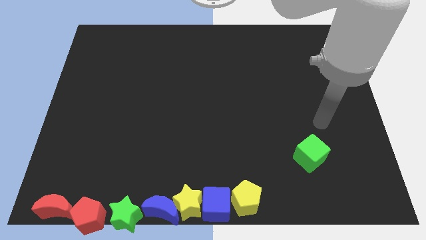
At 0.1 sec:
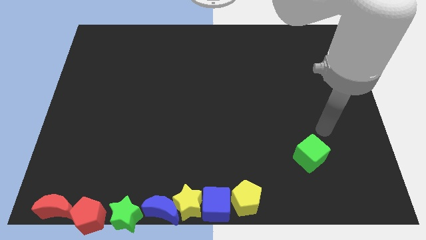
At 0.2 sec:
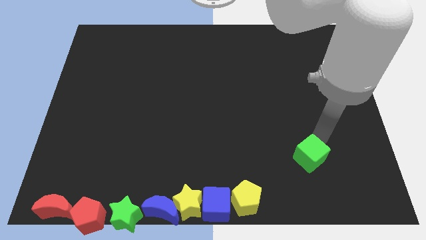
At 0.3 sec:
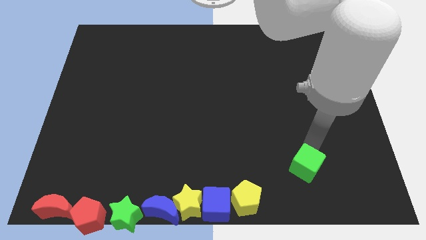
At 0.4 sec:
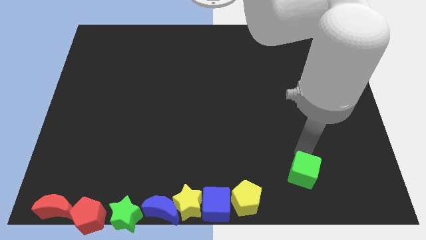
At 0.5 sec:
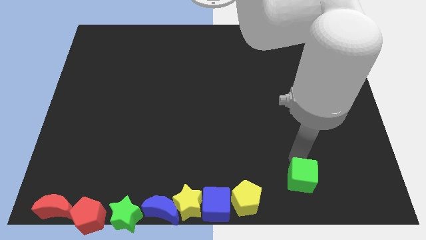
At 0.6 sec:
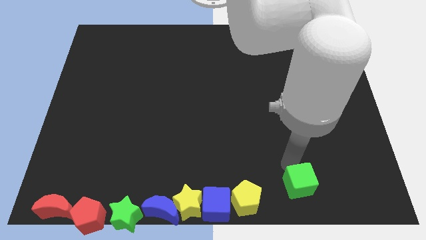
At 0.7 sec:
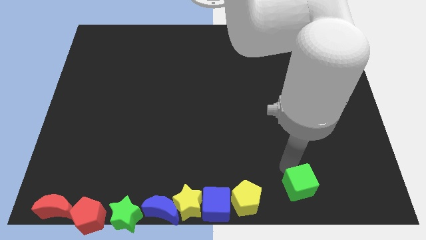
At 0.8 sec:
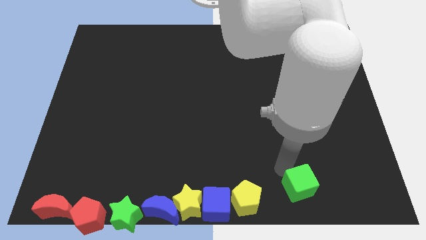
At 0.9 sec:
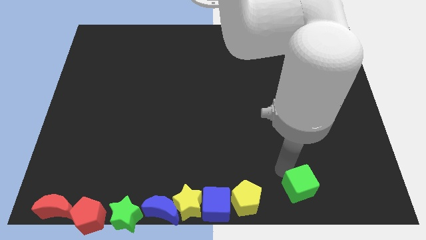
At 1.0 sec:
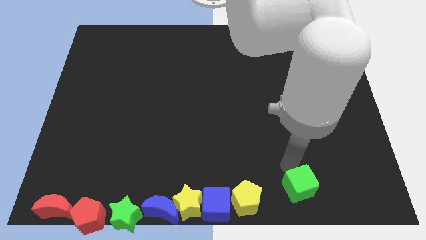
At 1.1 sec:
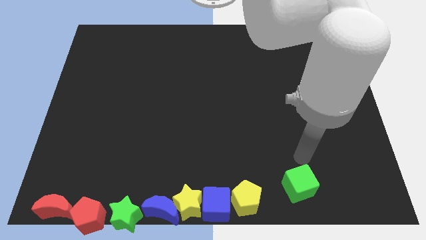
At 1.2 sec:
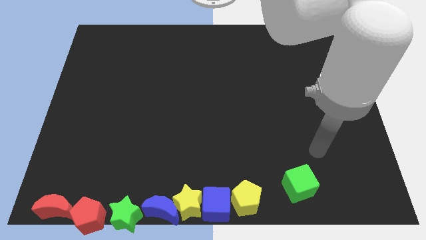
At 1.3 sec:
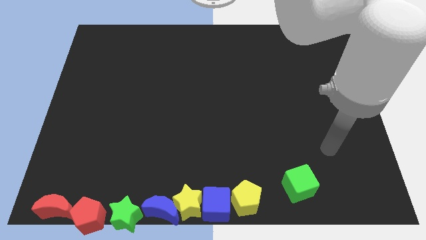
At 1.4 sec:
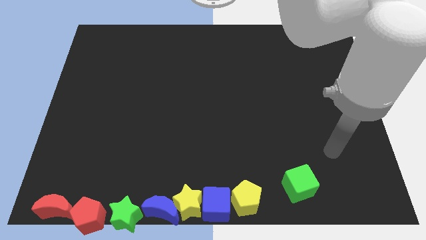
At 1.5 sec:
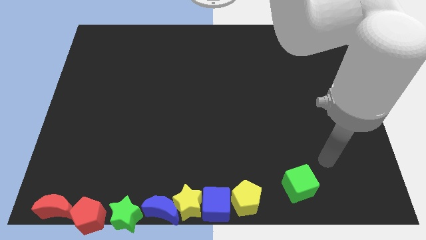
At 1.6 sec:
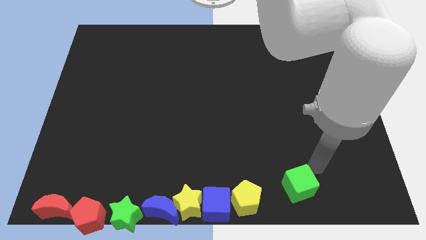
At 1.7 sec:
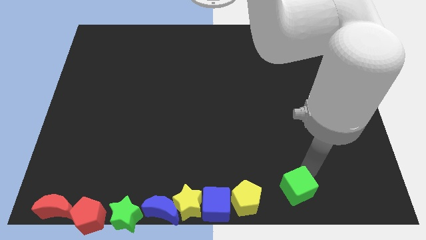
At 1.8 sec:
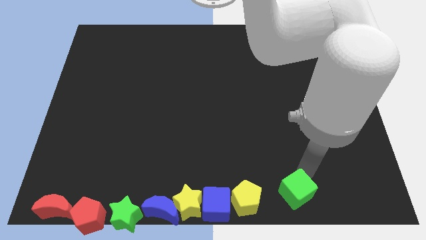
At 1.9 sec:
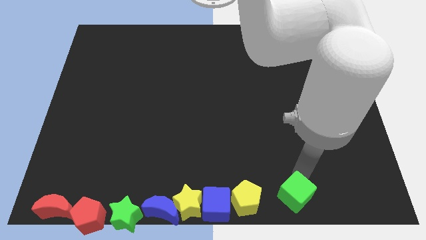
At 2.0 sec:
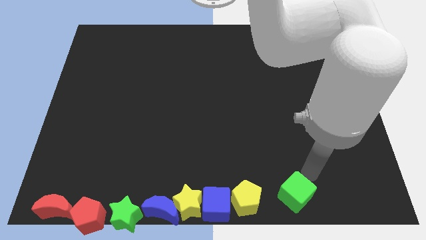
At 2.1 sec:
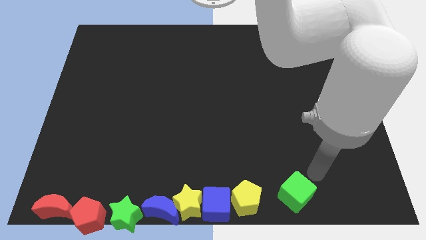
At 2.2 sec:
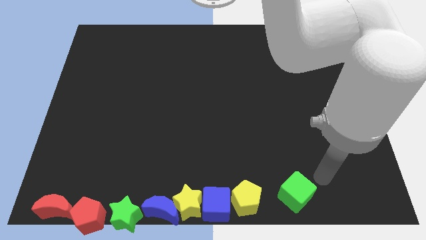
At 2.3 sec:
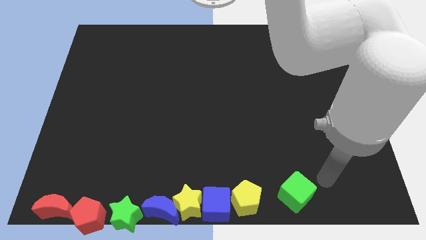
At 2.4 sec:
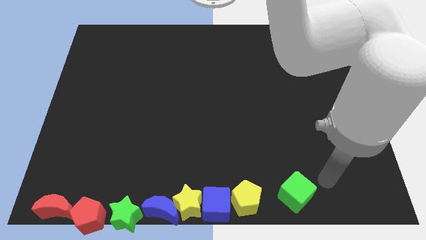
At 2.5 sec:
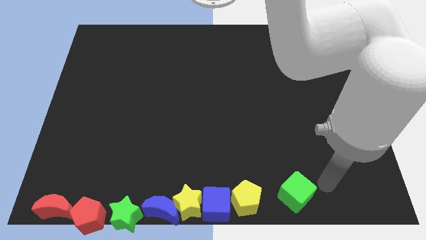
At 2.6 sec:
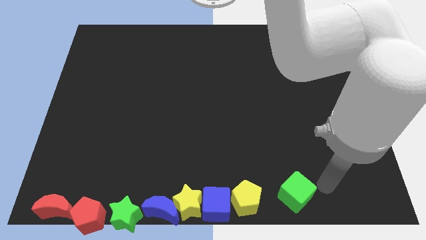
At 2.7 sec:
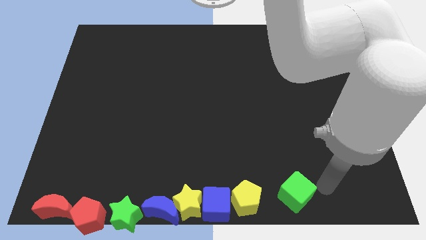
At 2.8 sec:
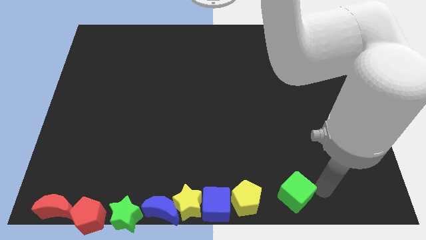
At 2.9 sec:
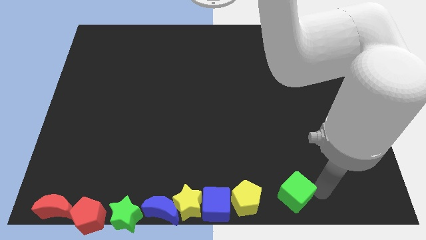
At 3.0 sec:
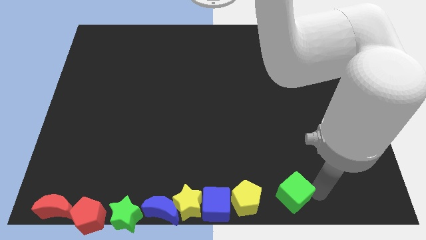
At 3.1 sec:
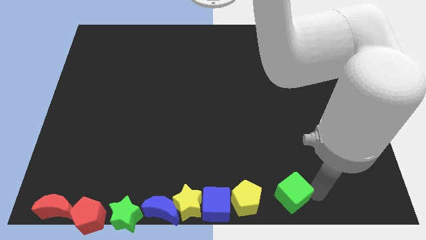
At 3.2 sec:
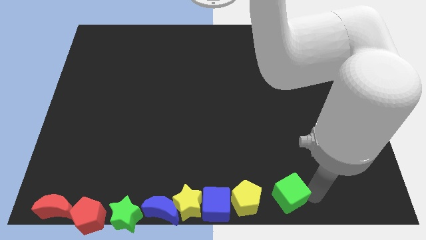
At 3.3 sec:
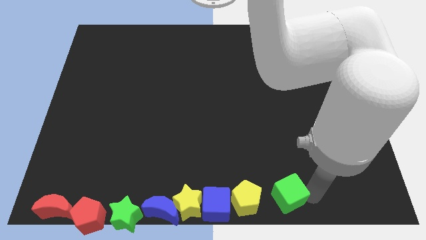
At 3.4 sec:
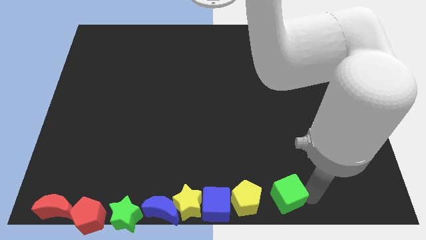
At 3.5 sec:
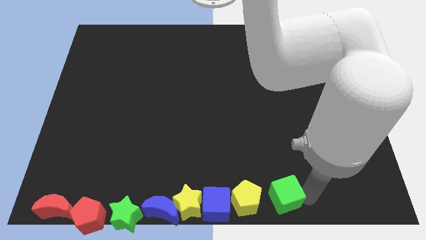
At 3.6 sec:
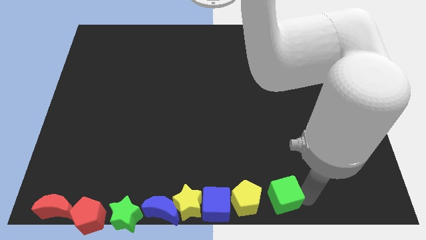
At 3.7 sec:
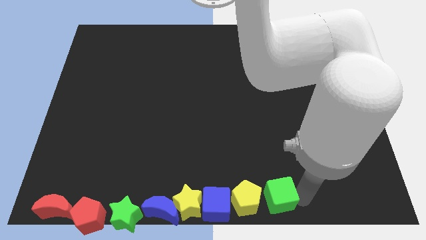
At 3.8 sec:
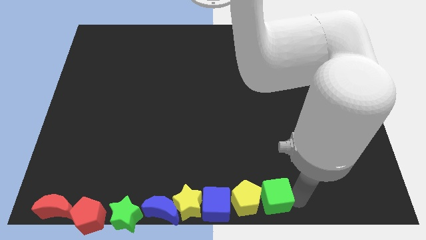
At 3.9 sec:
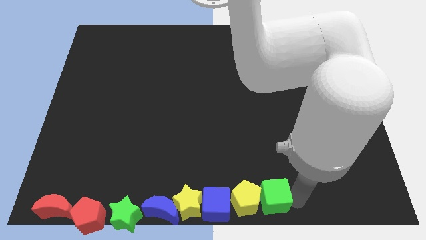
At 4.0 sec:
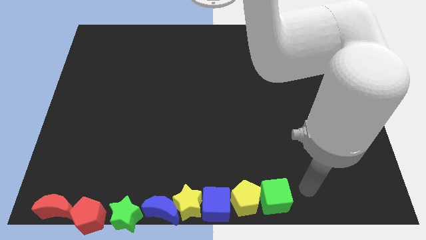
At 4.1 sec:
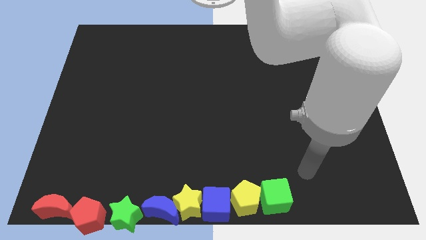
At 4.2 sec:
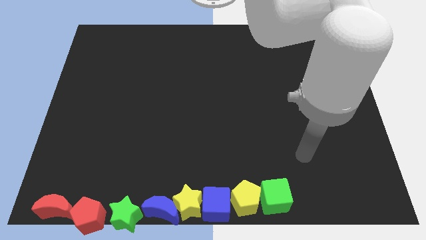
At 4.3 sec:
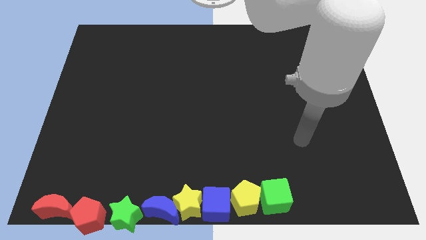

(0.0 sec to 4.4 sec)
push the green cube to the right side of the yellow pentagon

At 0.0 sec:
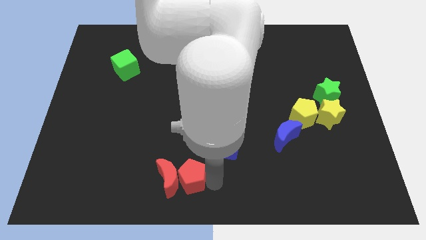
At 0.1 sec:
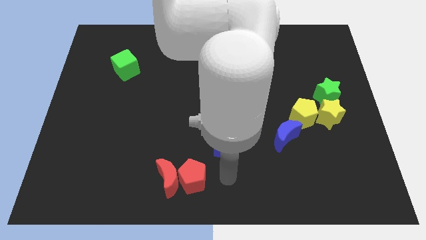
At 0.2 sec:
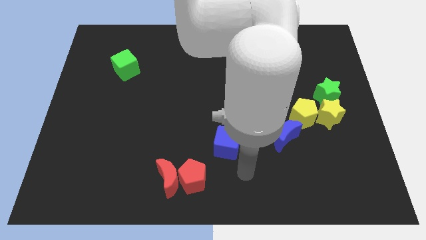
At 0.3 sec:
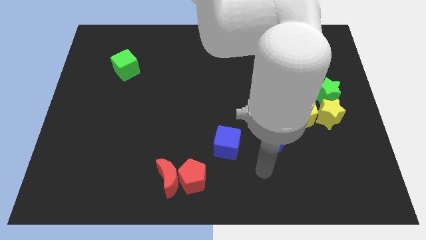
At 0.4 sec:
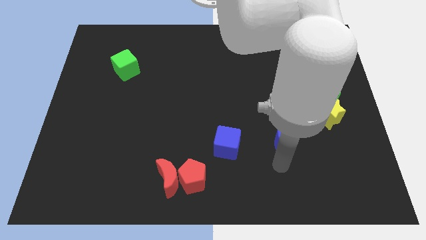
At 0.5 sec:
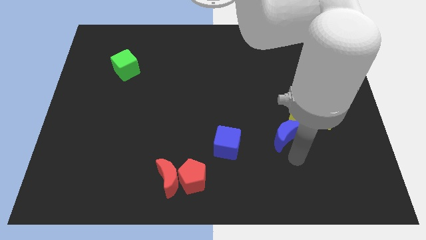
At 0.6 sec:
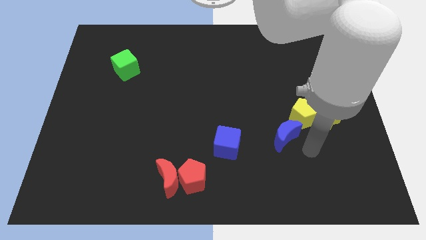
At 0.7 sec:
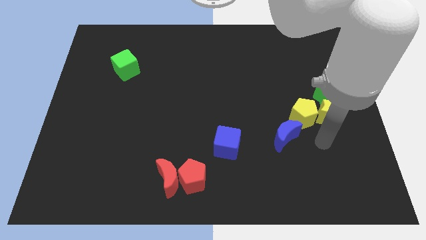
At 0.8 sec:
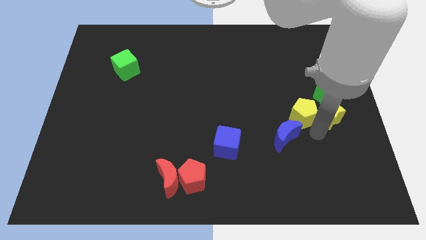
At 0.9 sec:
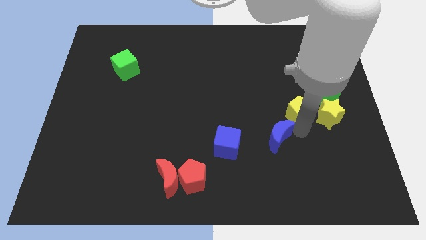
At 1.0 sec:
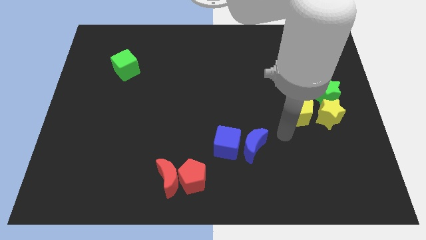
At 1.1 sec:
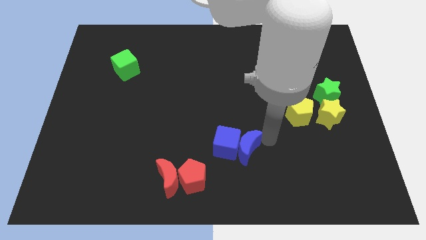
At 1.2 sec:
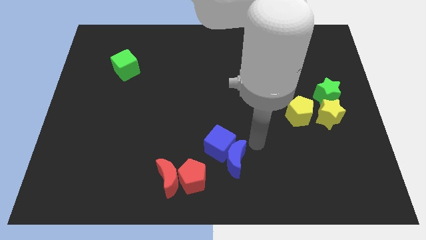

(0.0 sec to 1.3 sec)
slide the blue moon close to the blue cube

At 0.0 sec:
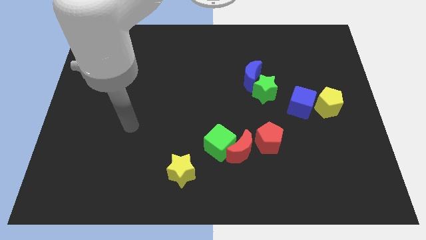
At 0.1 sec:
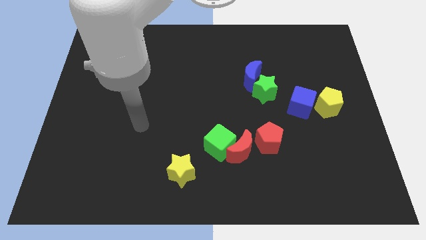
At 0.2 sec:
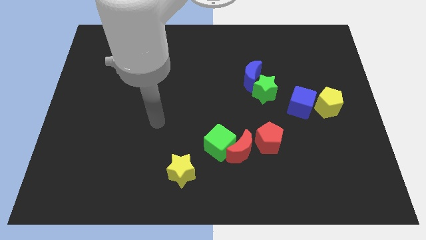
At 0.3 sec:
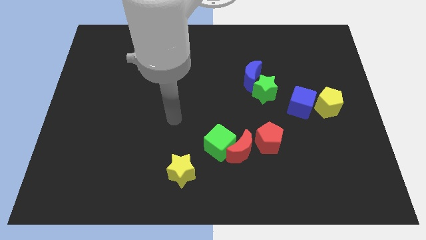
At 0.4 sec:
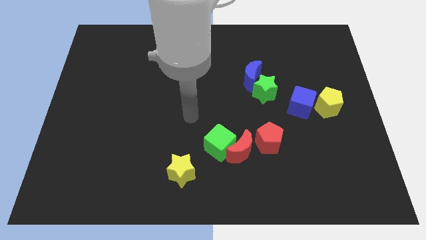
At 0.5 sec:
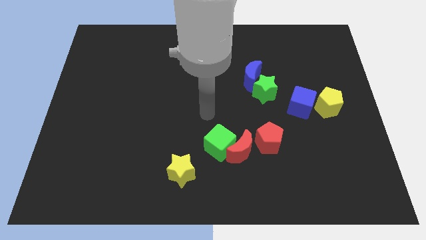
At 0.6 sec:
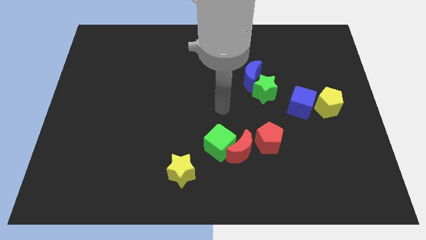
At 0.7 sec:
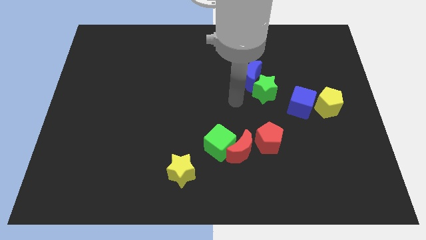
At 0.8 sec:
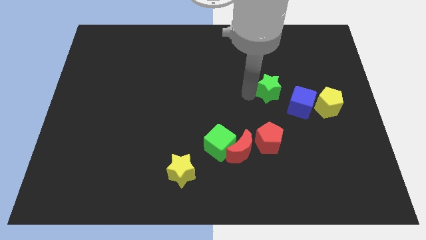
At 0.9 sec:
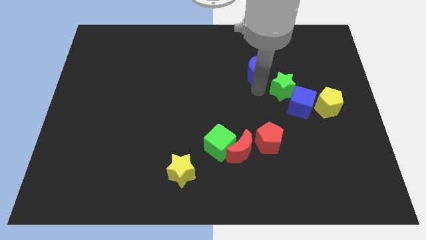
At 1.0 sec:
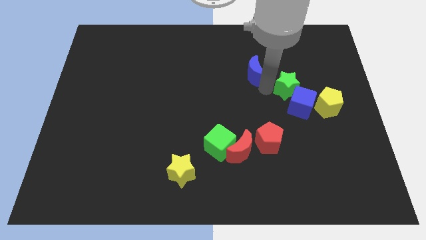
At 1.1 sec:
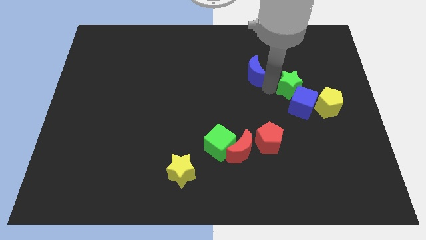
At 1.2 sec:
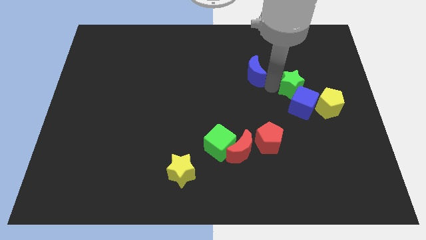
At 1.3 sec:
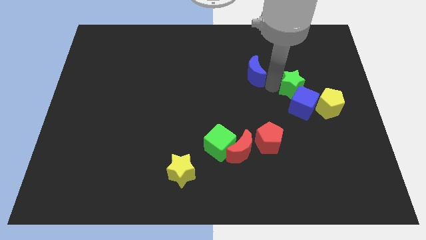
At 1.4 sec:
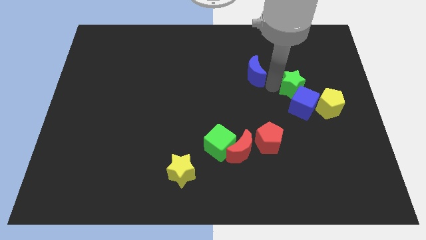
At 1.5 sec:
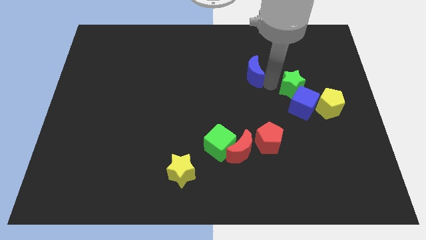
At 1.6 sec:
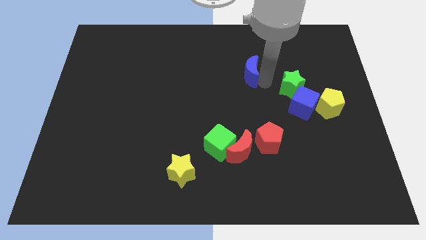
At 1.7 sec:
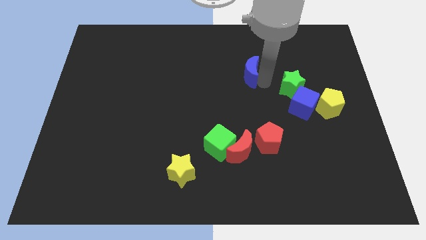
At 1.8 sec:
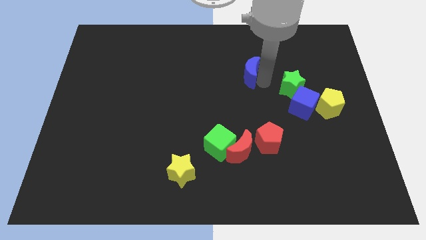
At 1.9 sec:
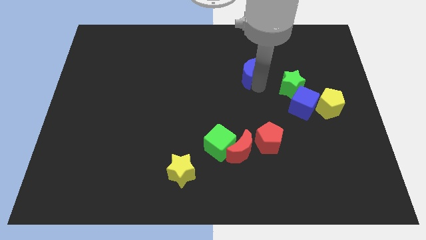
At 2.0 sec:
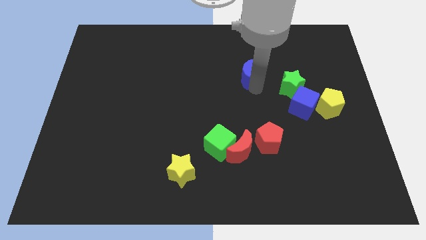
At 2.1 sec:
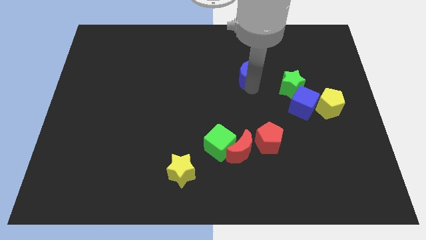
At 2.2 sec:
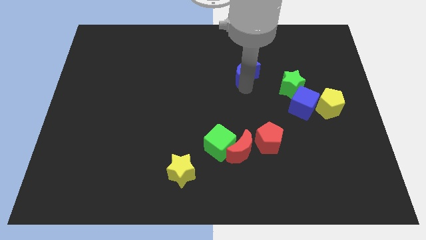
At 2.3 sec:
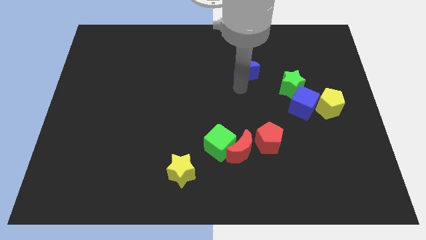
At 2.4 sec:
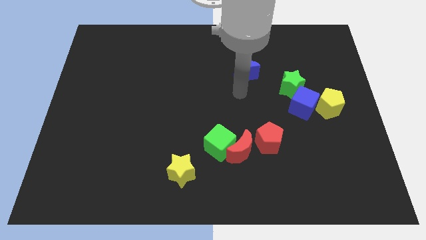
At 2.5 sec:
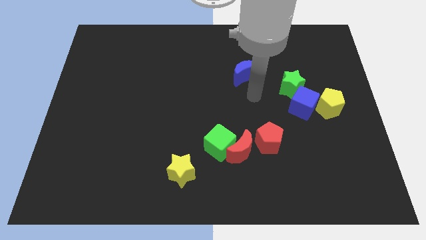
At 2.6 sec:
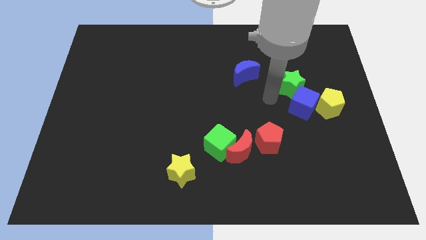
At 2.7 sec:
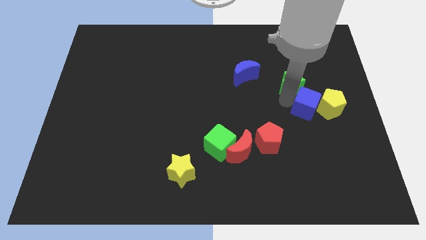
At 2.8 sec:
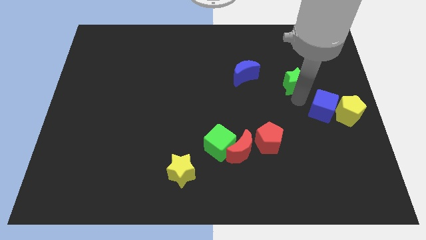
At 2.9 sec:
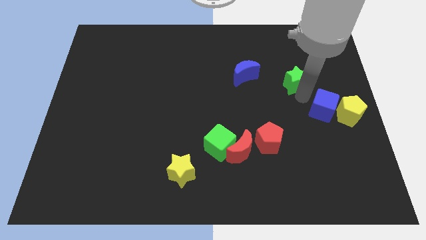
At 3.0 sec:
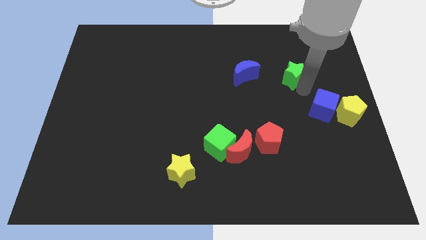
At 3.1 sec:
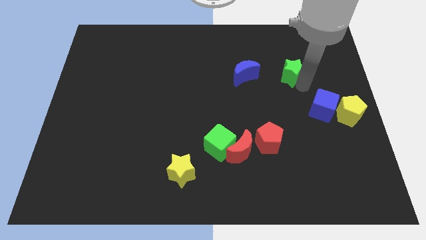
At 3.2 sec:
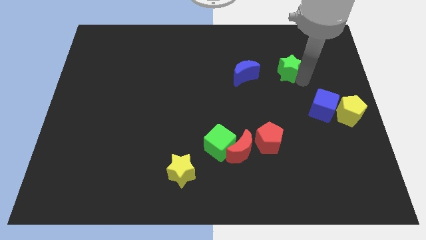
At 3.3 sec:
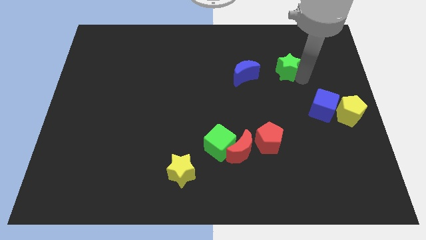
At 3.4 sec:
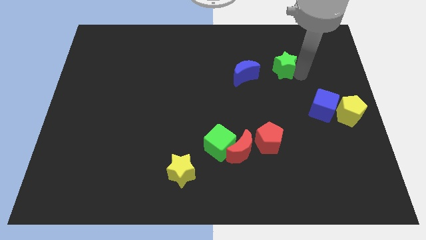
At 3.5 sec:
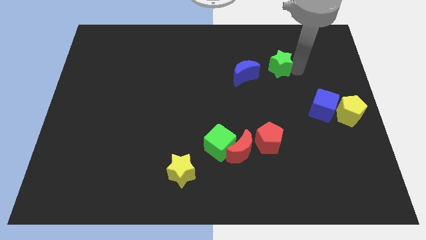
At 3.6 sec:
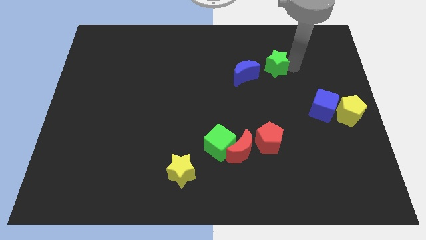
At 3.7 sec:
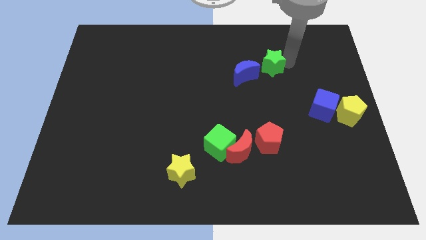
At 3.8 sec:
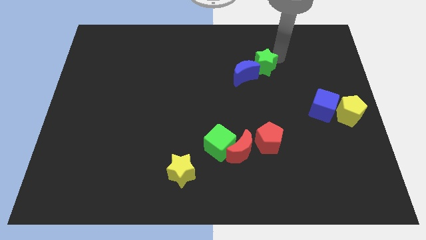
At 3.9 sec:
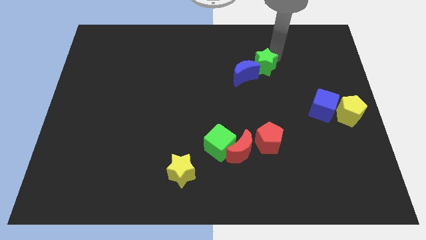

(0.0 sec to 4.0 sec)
place the green star at the top right side of blue crescent
